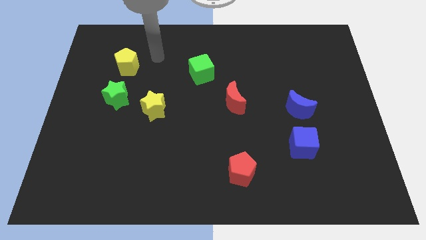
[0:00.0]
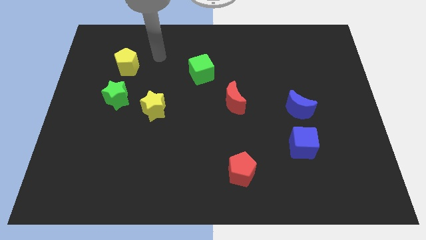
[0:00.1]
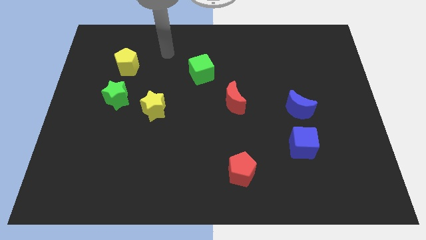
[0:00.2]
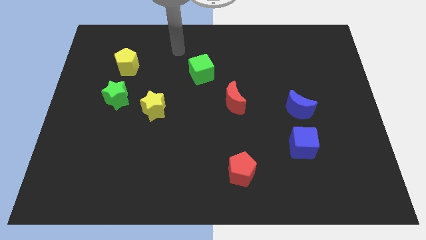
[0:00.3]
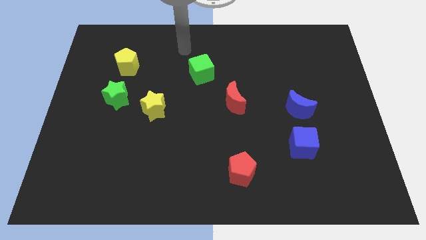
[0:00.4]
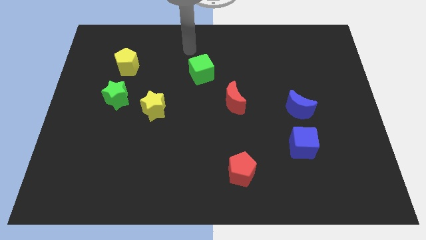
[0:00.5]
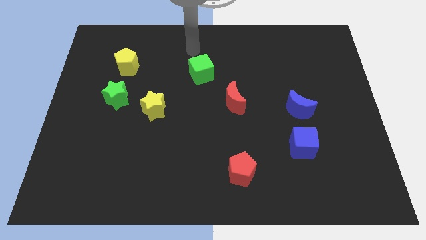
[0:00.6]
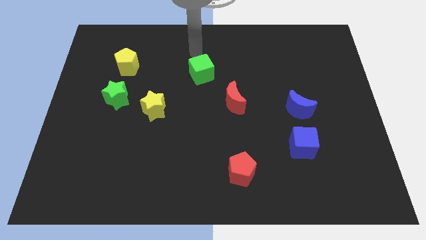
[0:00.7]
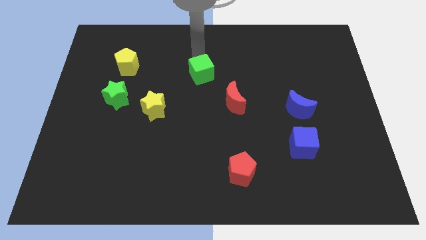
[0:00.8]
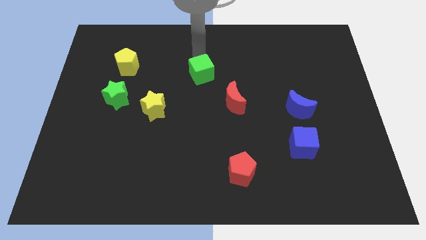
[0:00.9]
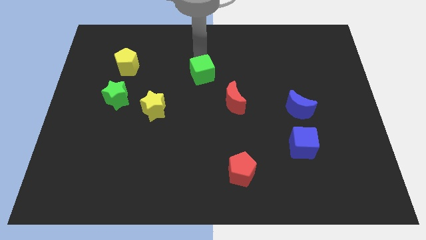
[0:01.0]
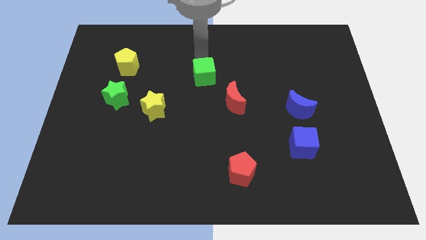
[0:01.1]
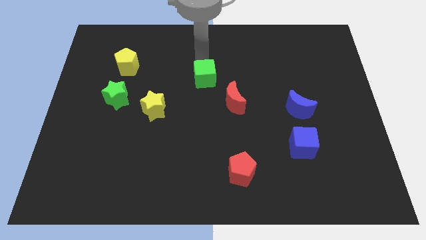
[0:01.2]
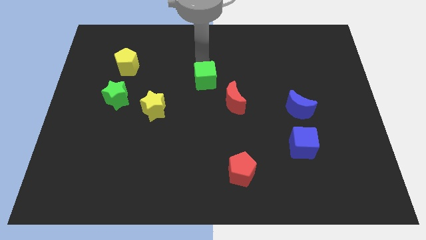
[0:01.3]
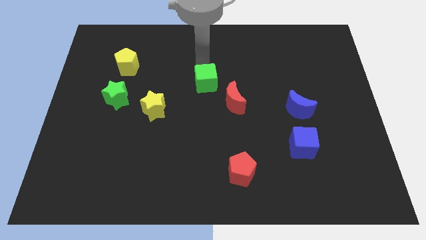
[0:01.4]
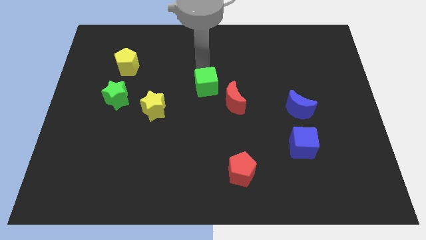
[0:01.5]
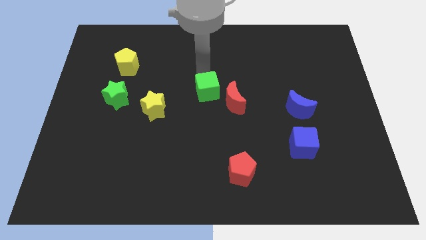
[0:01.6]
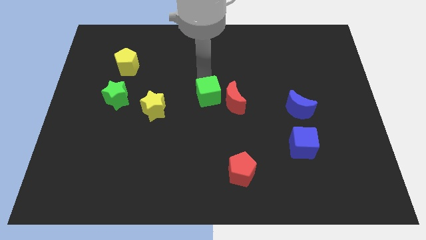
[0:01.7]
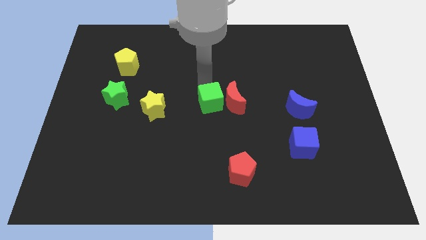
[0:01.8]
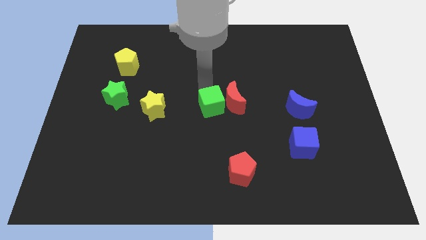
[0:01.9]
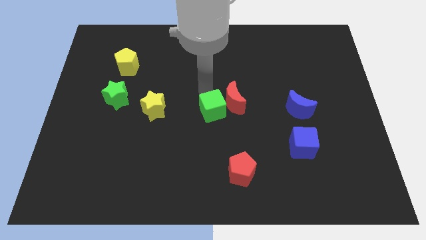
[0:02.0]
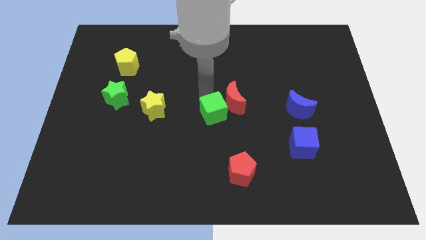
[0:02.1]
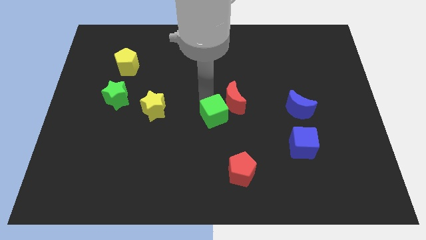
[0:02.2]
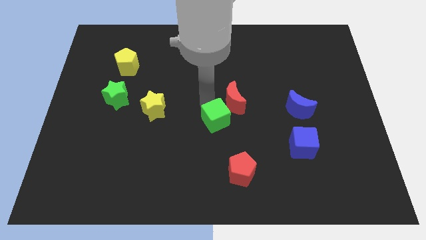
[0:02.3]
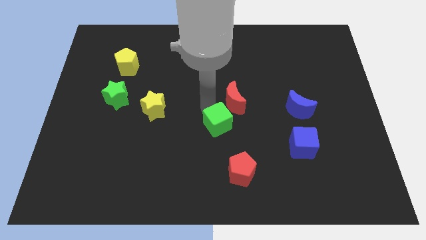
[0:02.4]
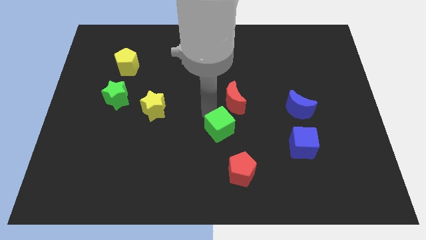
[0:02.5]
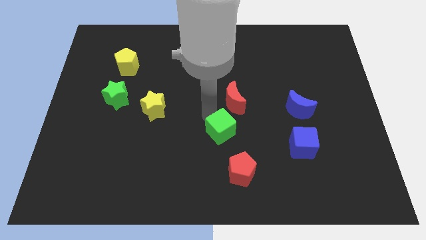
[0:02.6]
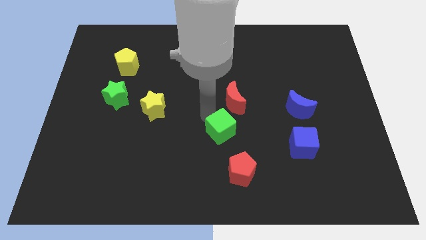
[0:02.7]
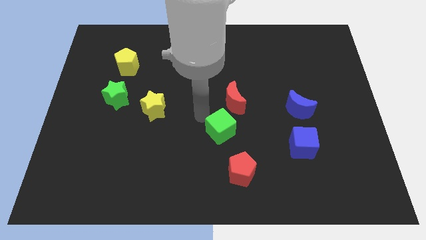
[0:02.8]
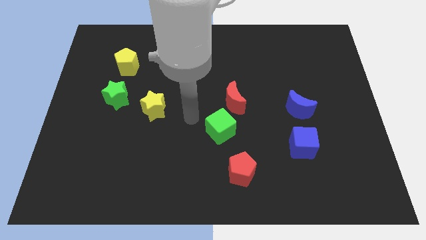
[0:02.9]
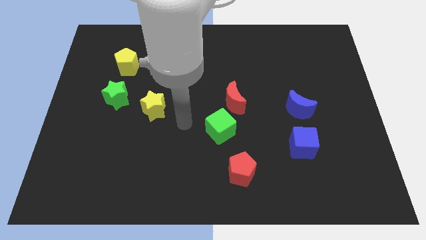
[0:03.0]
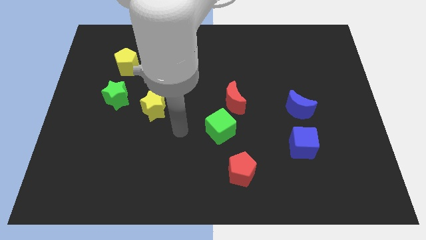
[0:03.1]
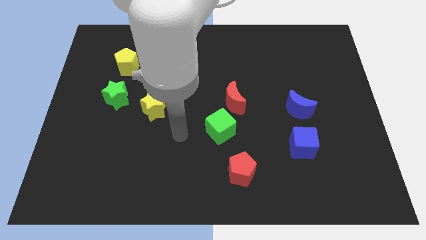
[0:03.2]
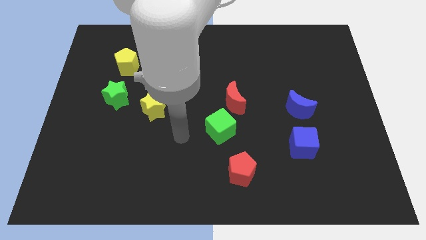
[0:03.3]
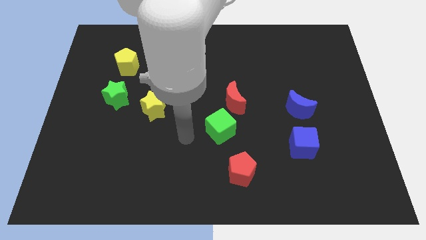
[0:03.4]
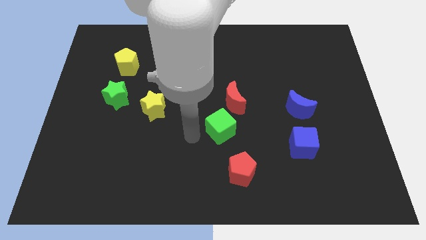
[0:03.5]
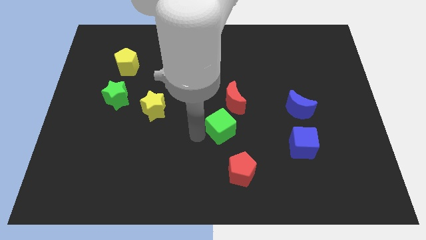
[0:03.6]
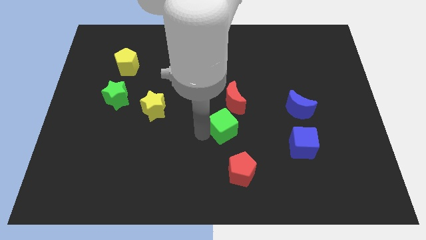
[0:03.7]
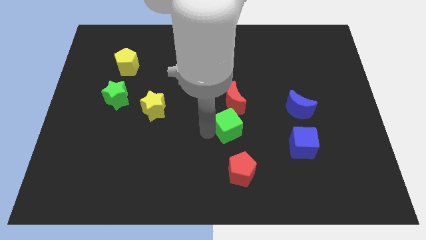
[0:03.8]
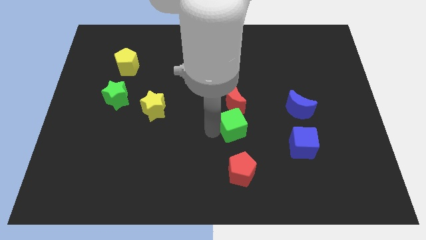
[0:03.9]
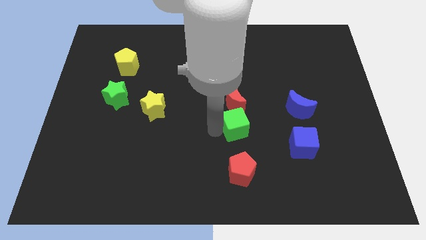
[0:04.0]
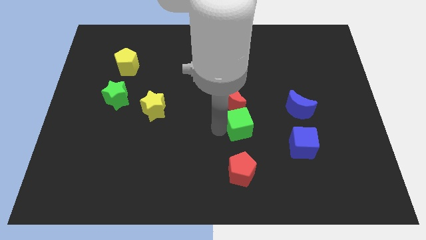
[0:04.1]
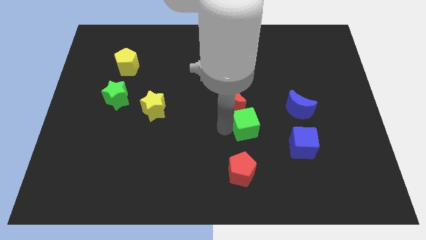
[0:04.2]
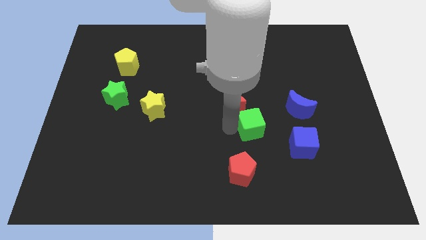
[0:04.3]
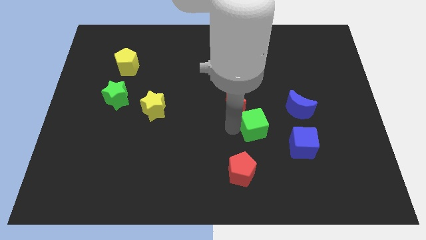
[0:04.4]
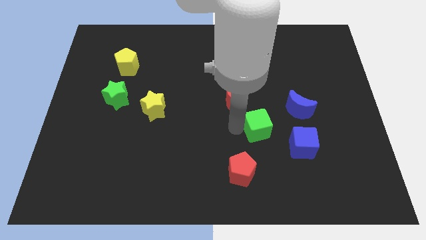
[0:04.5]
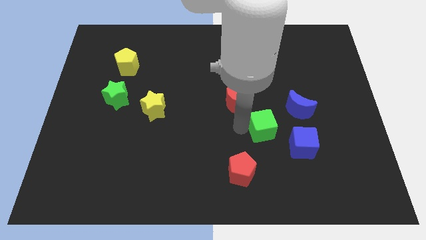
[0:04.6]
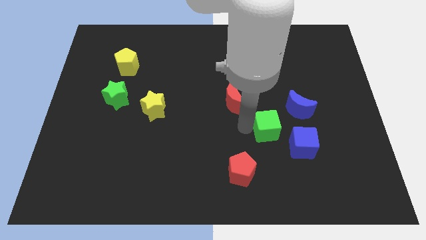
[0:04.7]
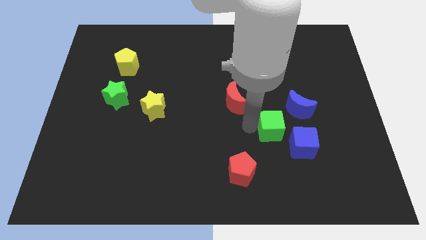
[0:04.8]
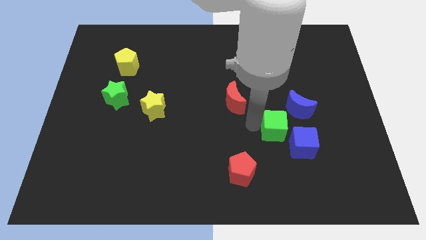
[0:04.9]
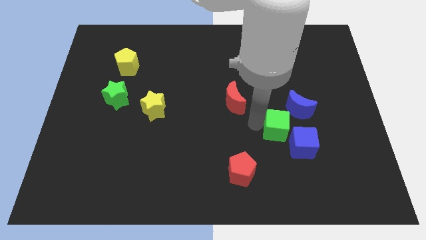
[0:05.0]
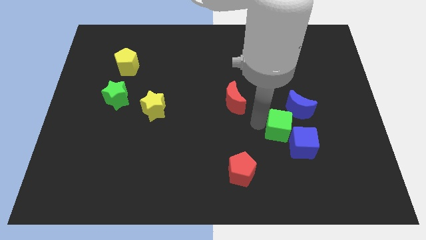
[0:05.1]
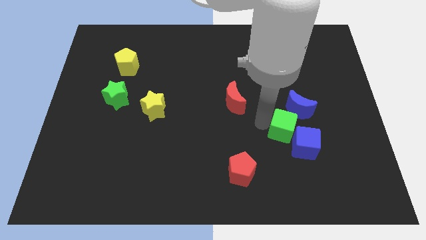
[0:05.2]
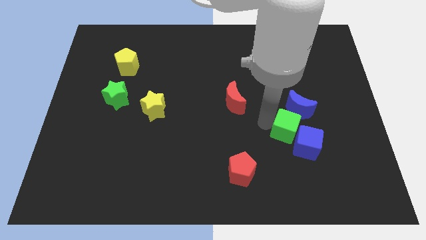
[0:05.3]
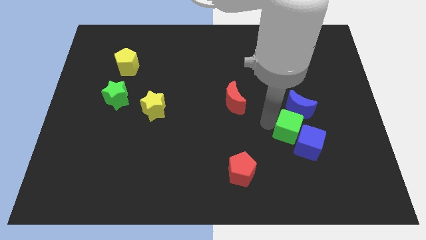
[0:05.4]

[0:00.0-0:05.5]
push the green cube towards the blue cube

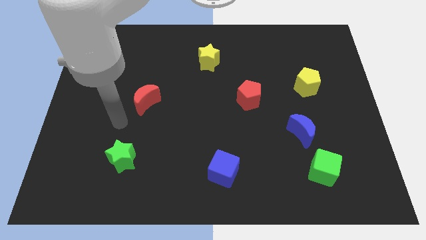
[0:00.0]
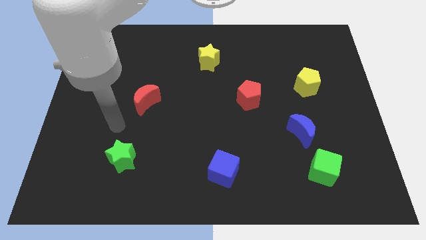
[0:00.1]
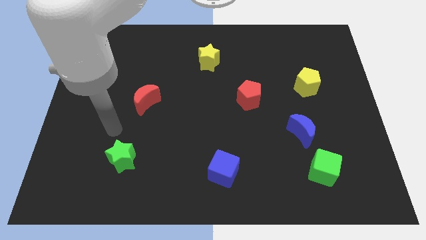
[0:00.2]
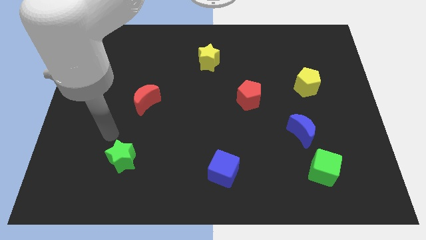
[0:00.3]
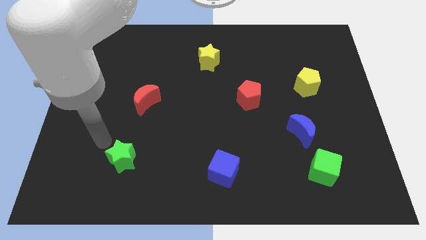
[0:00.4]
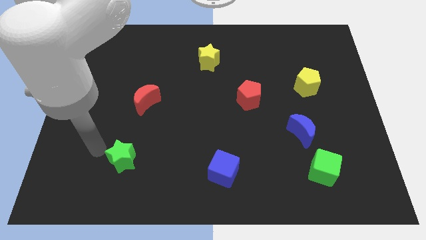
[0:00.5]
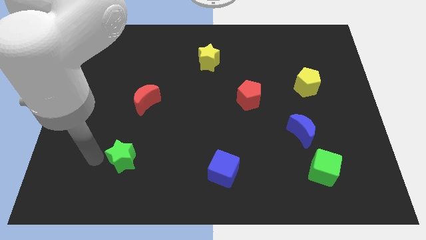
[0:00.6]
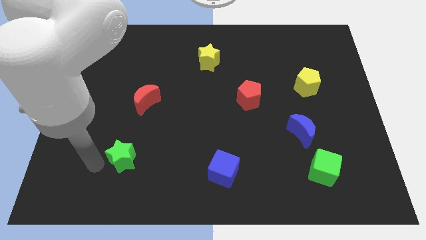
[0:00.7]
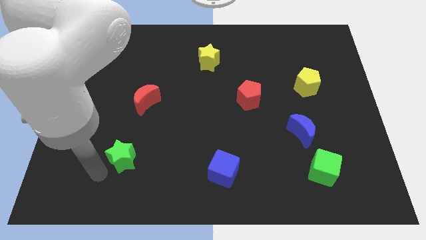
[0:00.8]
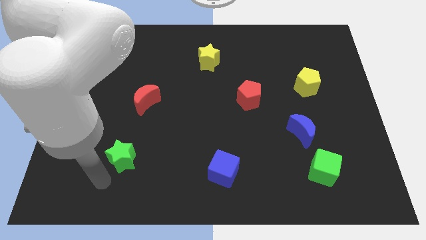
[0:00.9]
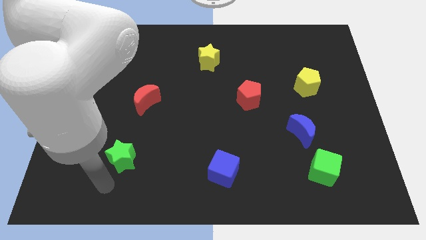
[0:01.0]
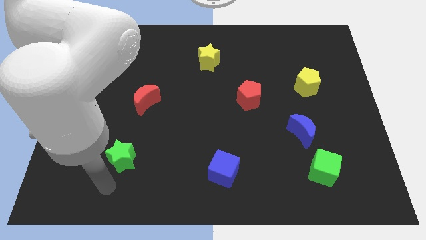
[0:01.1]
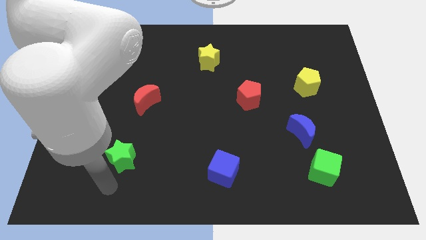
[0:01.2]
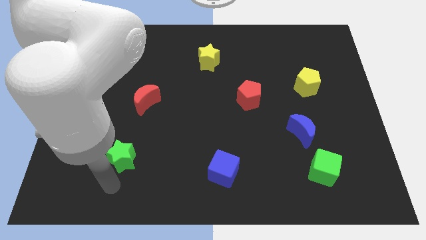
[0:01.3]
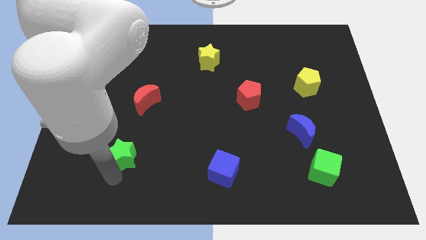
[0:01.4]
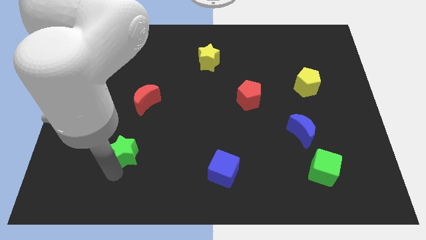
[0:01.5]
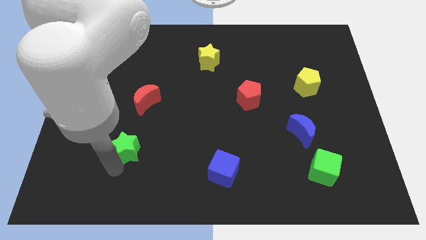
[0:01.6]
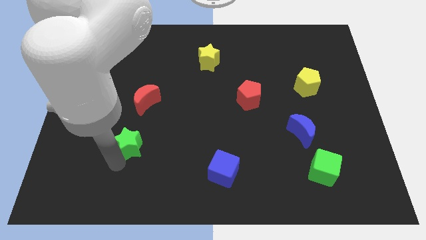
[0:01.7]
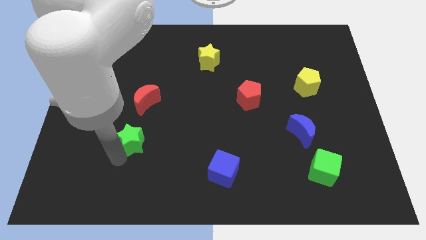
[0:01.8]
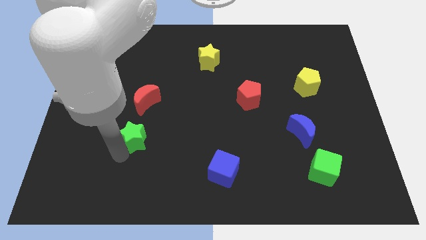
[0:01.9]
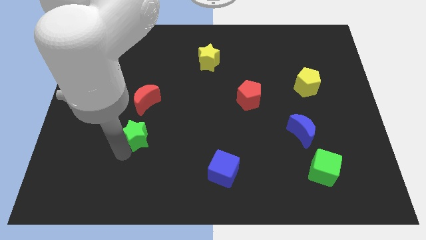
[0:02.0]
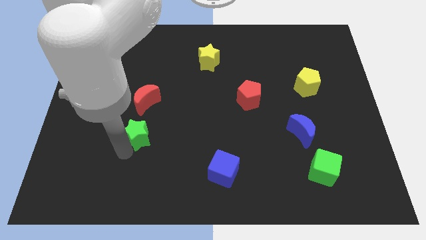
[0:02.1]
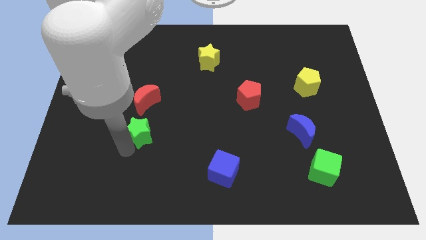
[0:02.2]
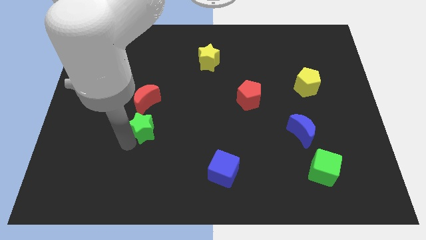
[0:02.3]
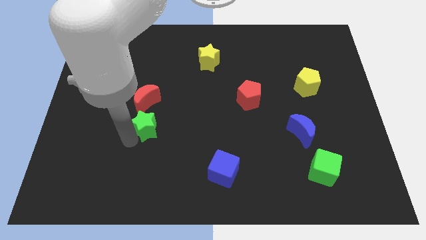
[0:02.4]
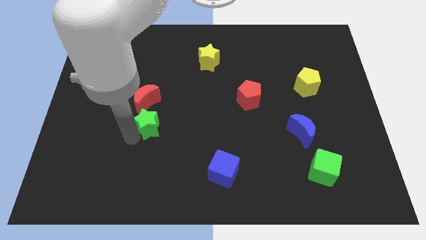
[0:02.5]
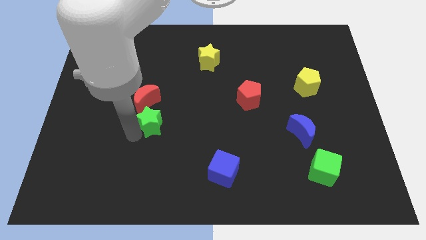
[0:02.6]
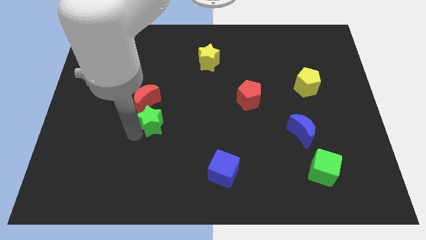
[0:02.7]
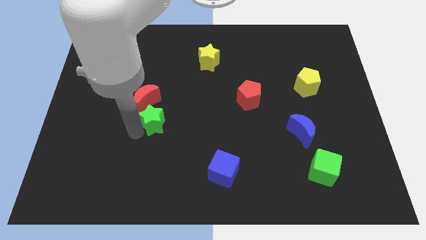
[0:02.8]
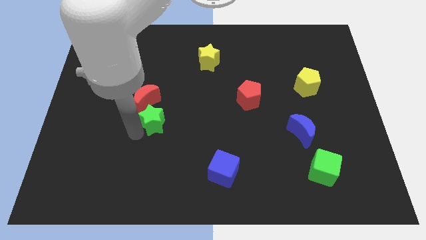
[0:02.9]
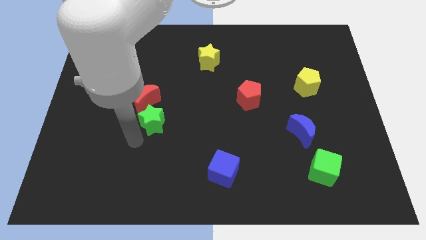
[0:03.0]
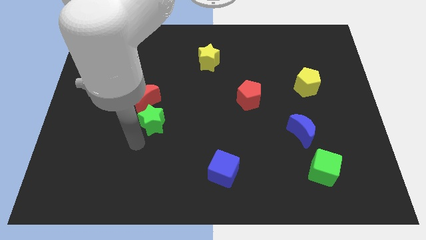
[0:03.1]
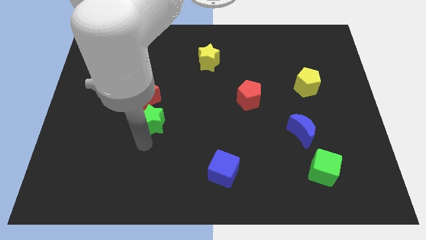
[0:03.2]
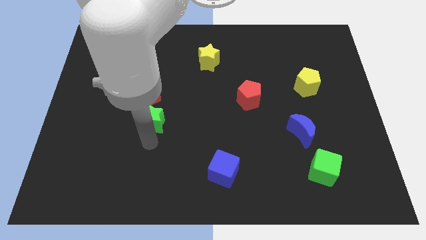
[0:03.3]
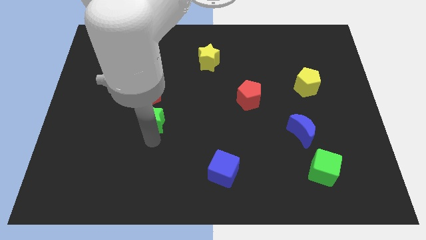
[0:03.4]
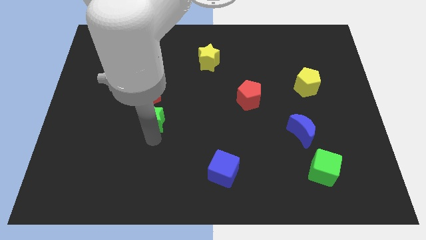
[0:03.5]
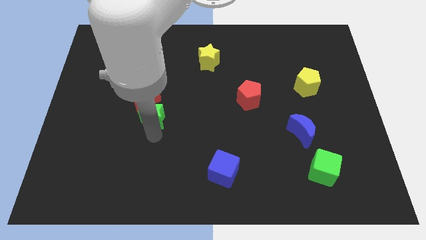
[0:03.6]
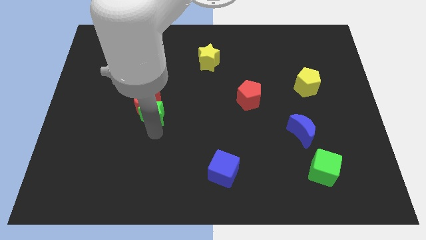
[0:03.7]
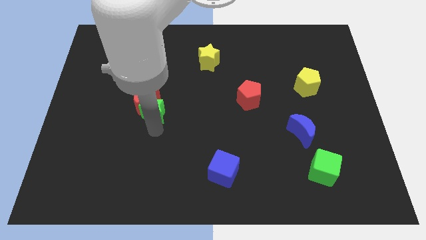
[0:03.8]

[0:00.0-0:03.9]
move the green star close to the red moon
